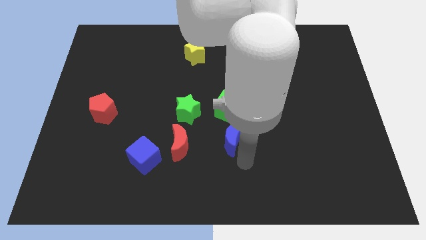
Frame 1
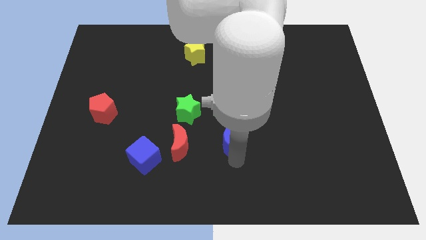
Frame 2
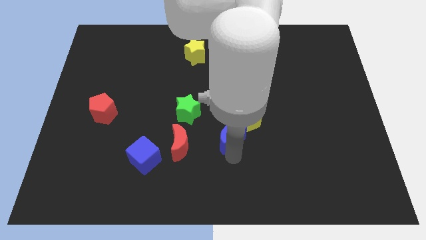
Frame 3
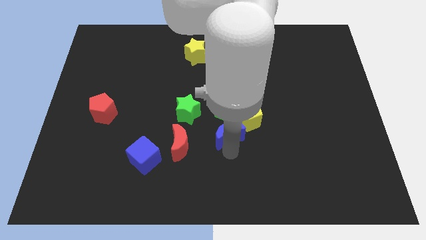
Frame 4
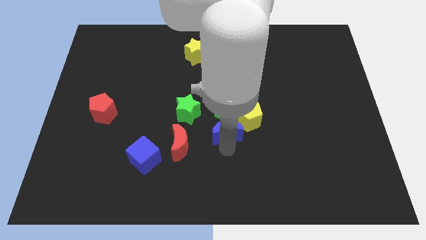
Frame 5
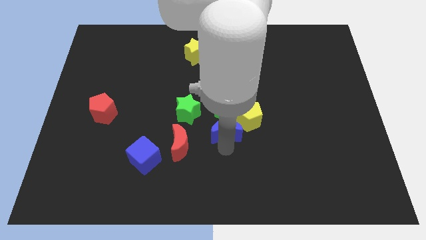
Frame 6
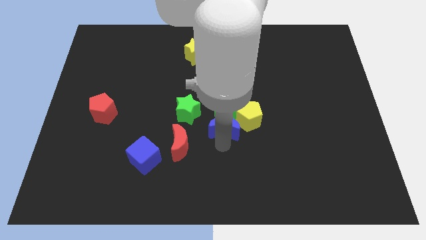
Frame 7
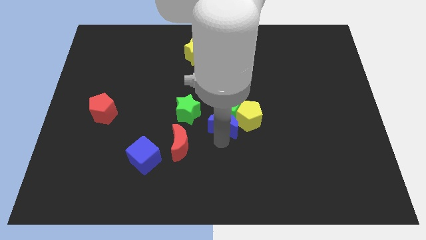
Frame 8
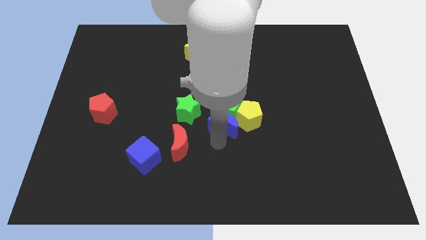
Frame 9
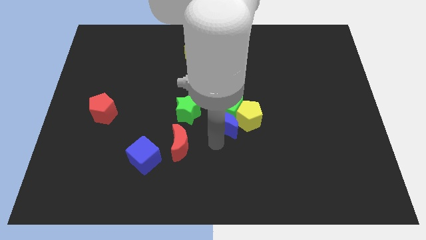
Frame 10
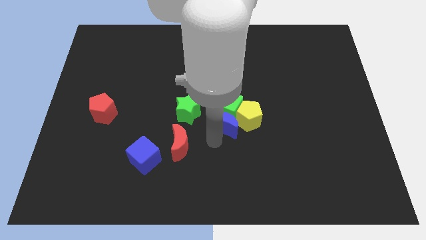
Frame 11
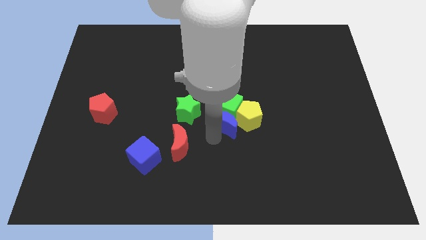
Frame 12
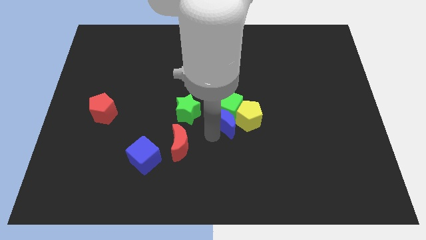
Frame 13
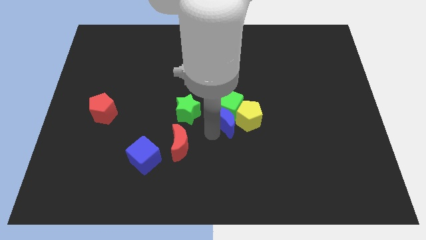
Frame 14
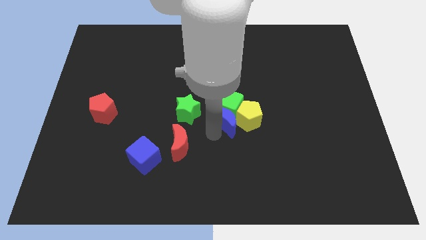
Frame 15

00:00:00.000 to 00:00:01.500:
move the blue crescent slightly upwards to the green cube

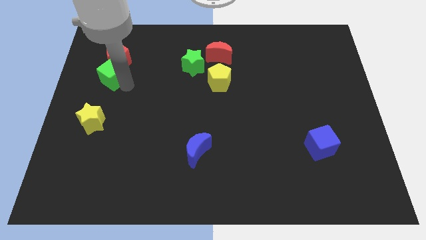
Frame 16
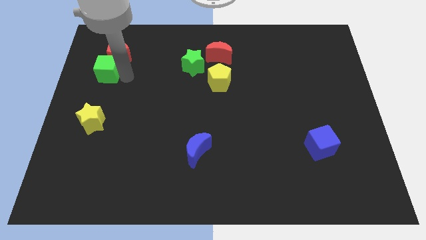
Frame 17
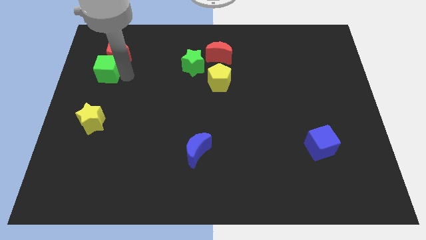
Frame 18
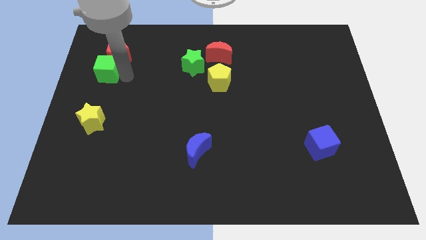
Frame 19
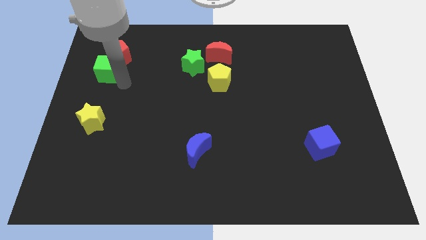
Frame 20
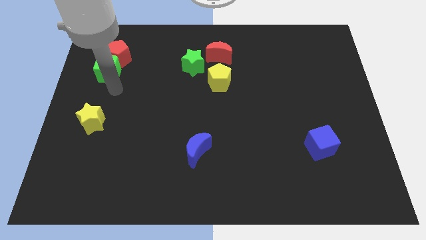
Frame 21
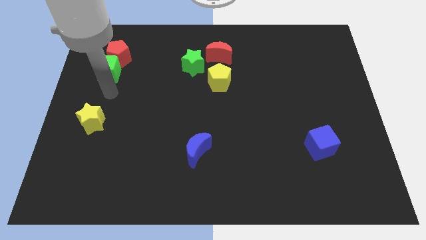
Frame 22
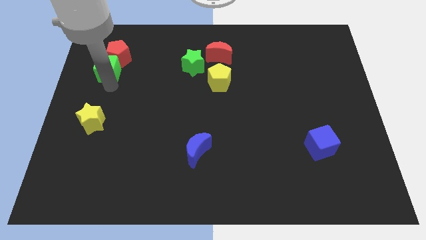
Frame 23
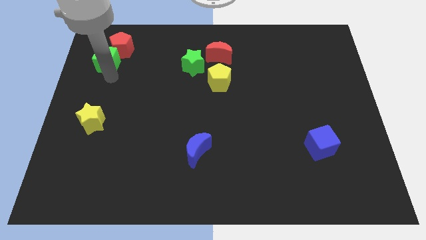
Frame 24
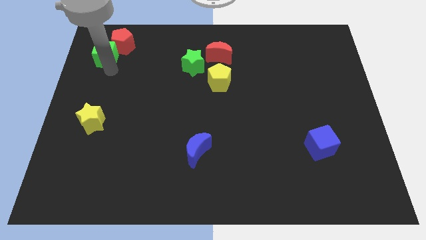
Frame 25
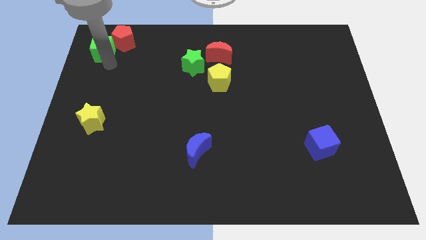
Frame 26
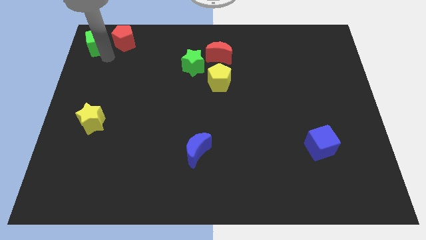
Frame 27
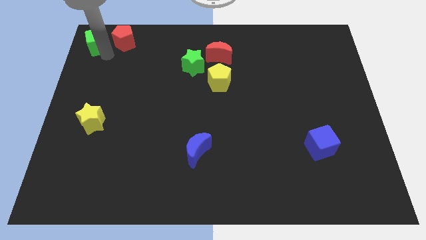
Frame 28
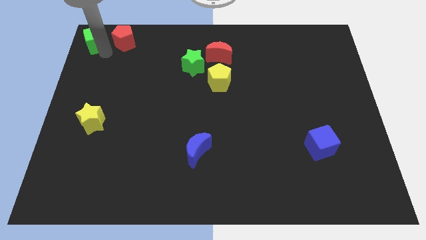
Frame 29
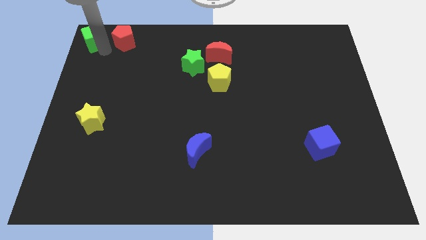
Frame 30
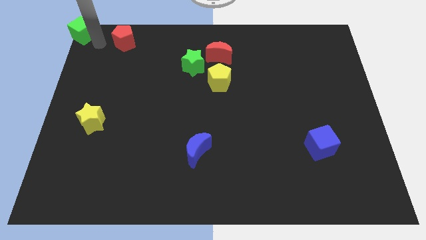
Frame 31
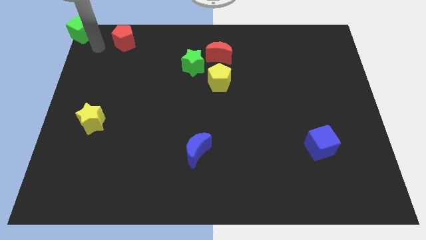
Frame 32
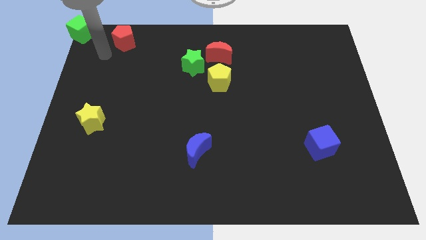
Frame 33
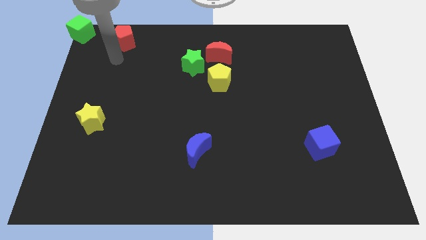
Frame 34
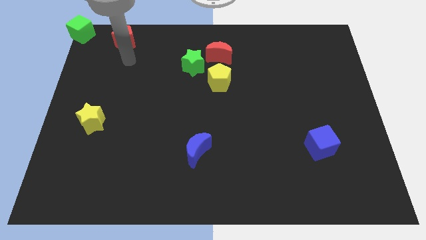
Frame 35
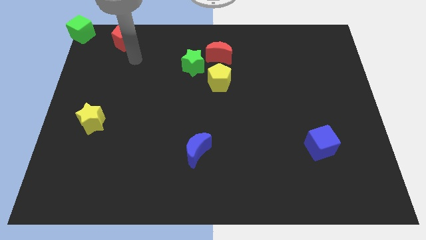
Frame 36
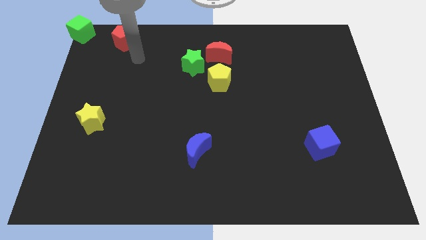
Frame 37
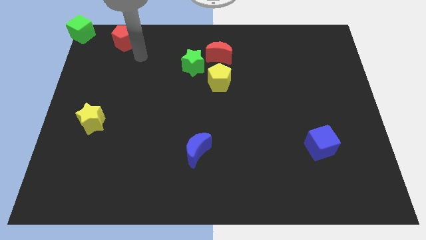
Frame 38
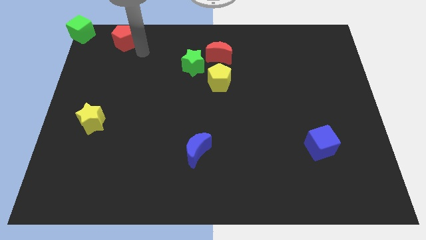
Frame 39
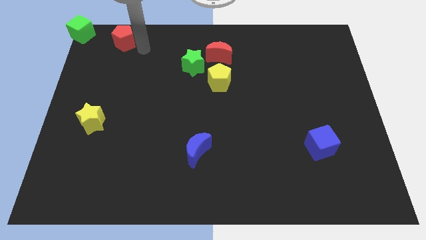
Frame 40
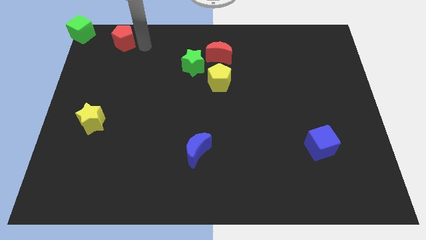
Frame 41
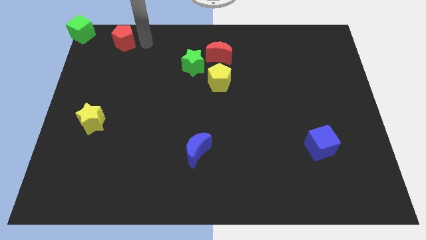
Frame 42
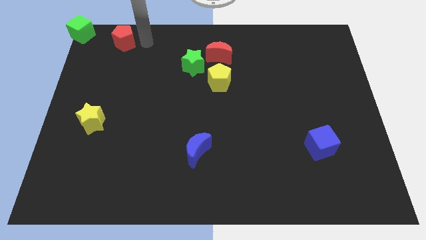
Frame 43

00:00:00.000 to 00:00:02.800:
place the green cube at the top left of the board

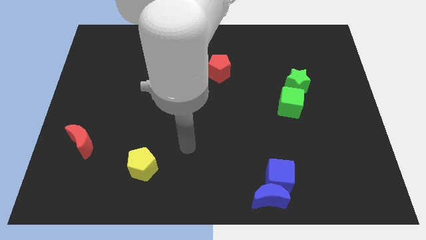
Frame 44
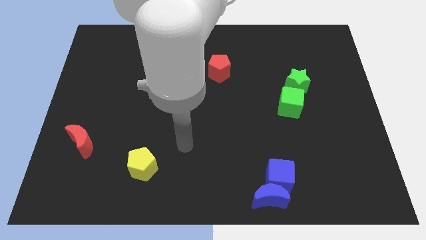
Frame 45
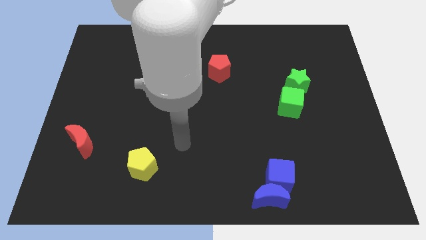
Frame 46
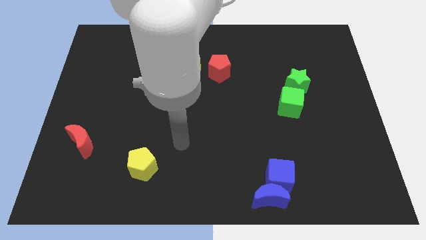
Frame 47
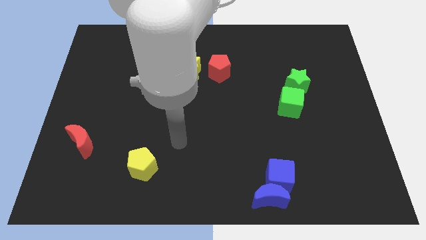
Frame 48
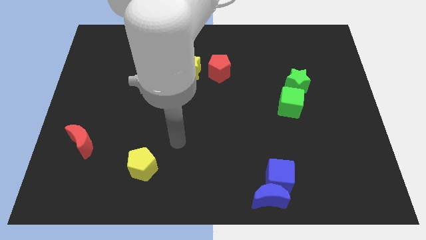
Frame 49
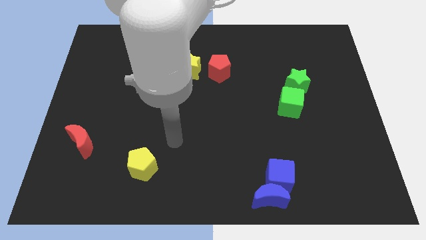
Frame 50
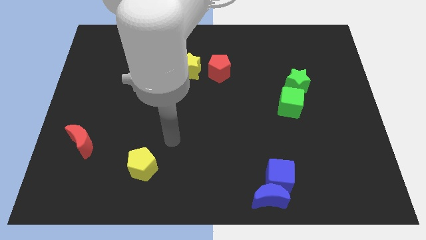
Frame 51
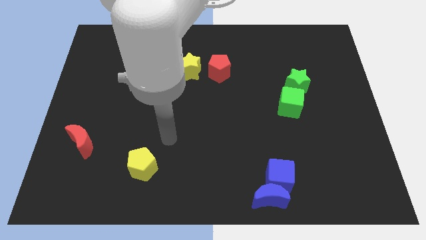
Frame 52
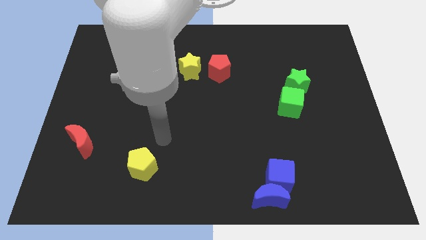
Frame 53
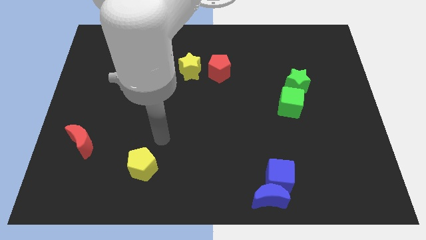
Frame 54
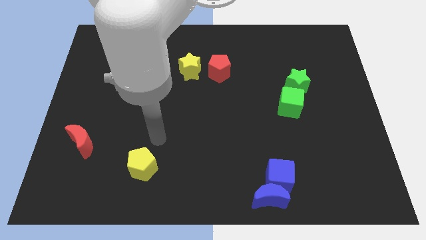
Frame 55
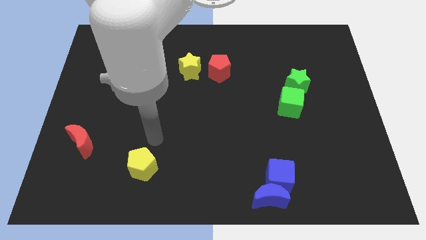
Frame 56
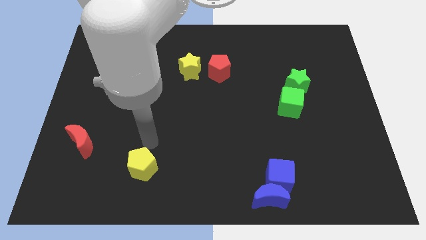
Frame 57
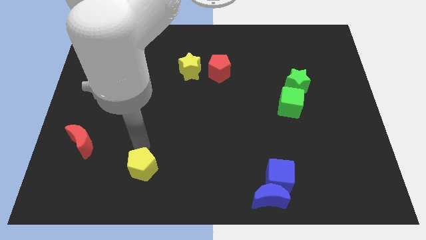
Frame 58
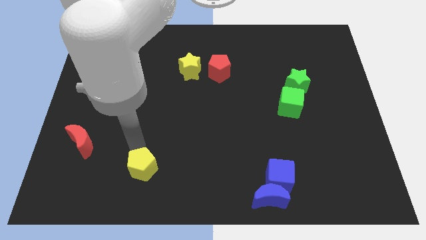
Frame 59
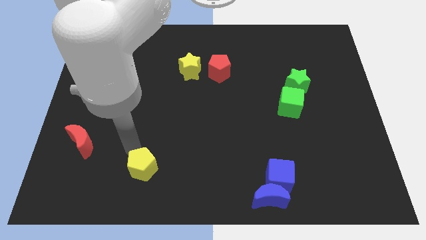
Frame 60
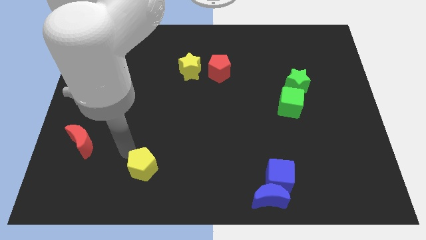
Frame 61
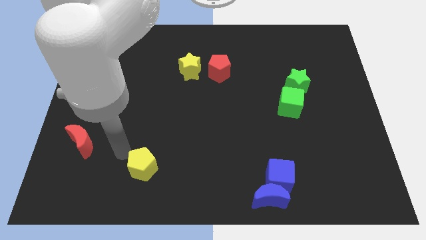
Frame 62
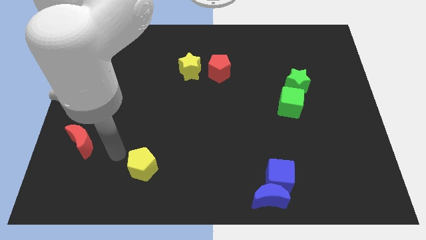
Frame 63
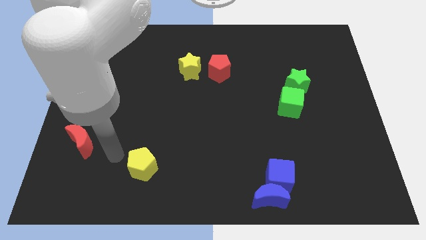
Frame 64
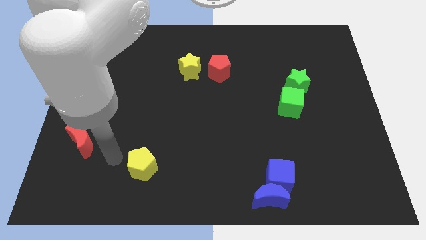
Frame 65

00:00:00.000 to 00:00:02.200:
go to the left side of the yellow pentagon

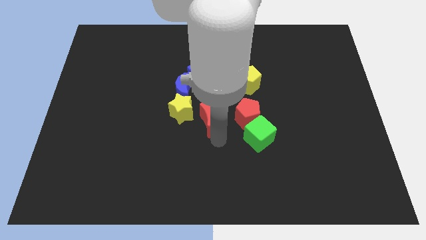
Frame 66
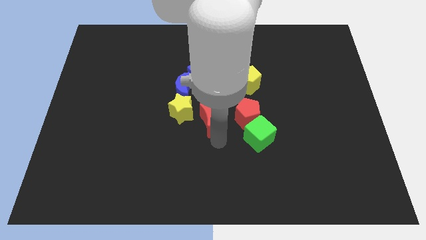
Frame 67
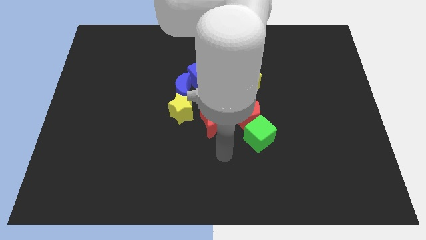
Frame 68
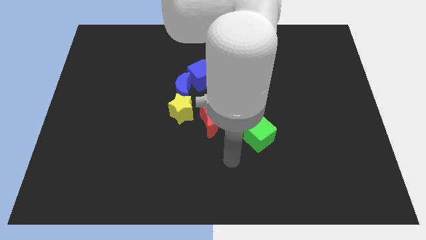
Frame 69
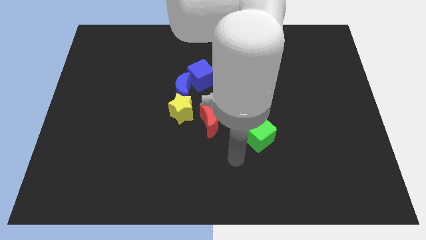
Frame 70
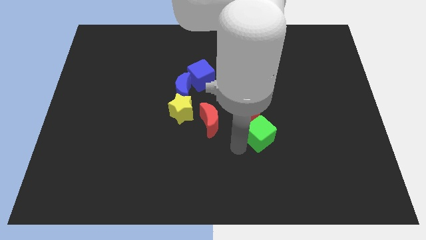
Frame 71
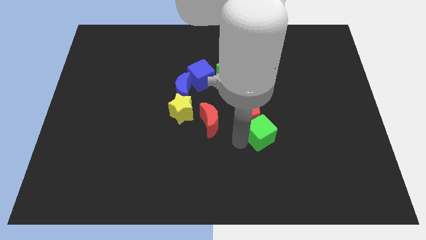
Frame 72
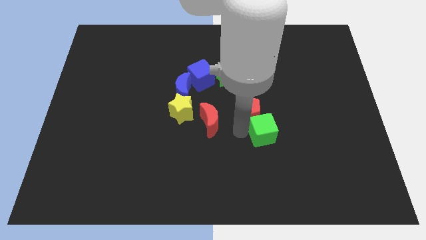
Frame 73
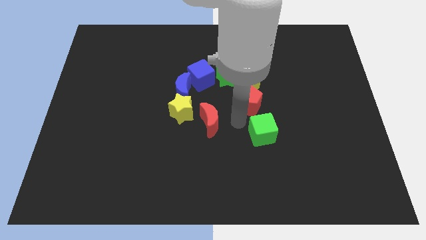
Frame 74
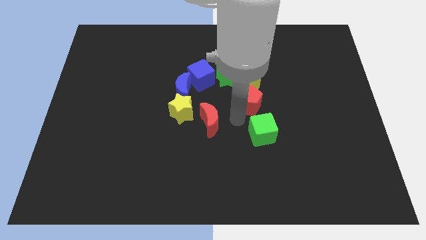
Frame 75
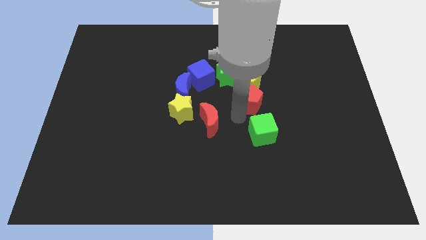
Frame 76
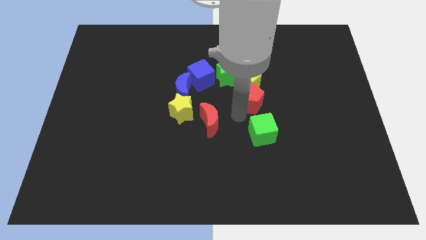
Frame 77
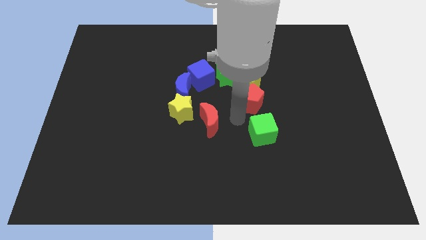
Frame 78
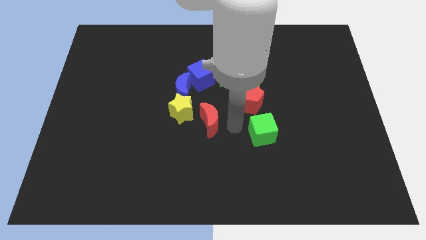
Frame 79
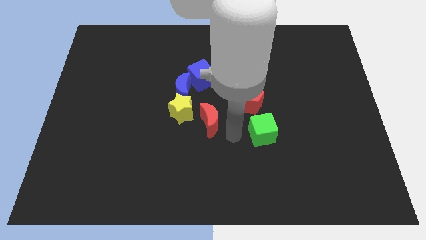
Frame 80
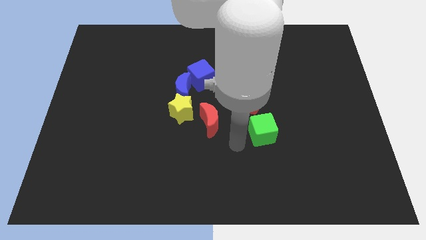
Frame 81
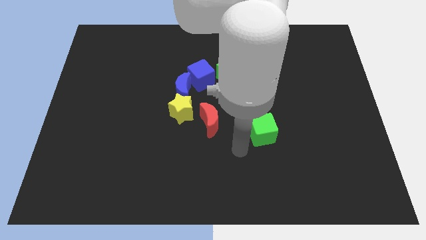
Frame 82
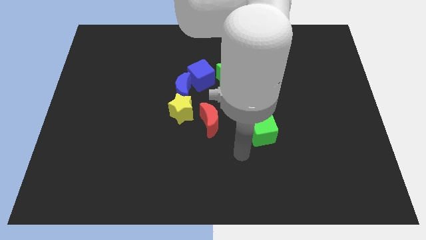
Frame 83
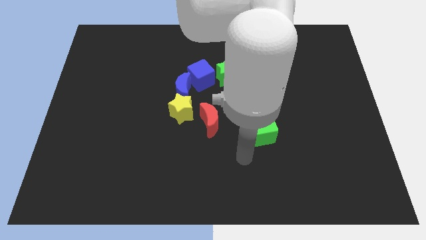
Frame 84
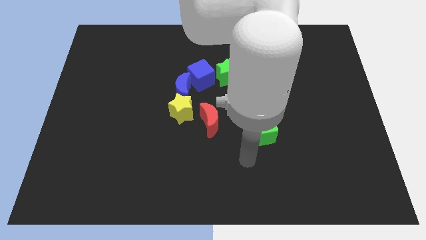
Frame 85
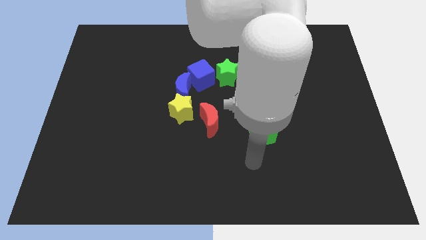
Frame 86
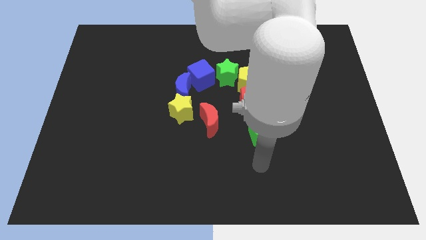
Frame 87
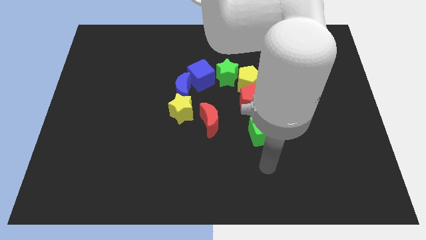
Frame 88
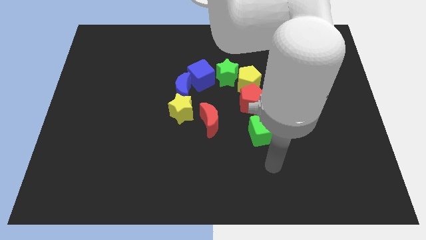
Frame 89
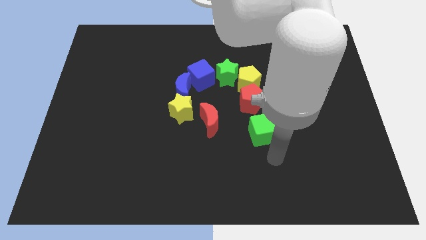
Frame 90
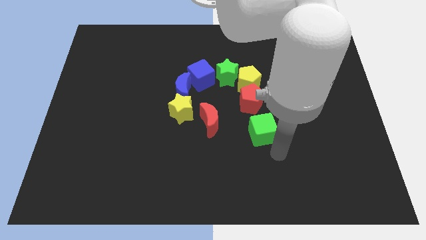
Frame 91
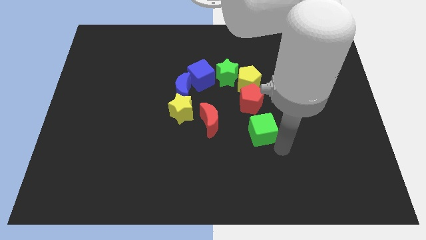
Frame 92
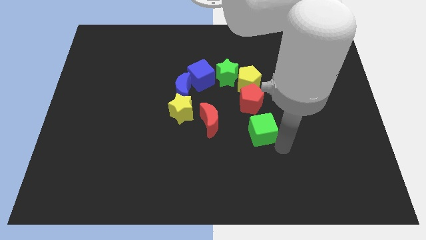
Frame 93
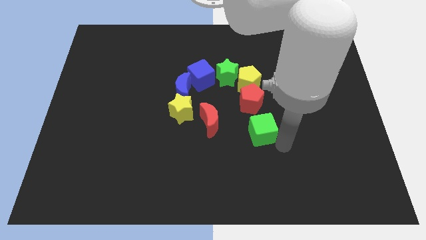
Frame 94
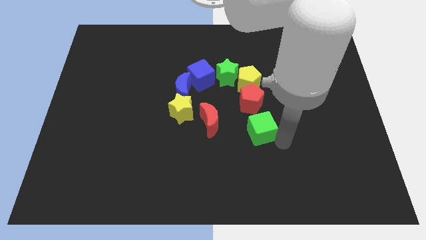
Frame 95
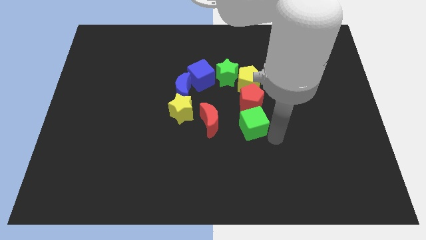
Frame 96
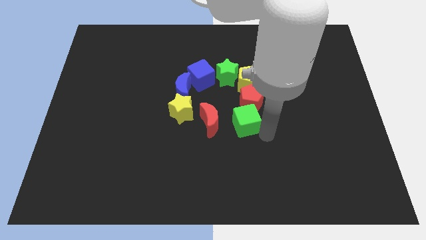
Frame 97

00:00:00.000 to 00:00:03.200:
move the green cube right to the red moon
